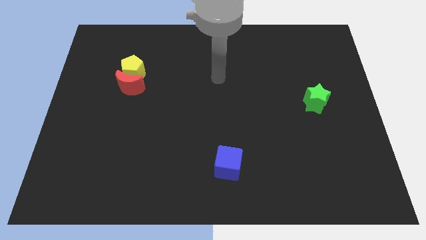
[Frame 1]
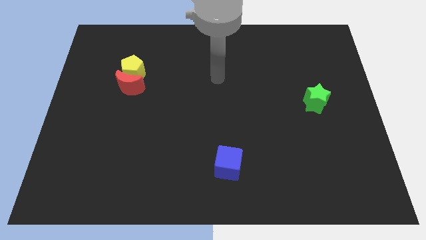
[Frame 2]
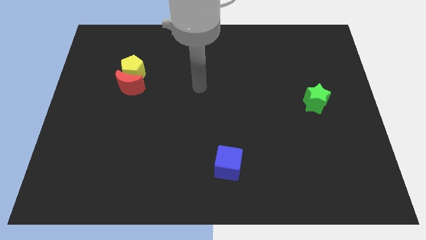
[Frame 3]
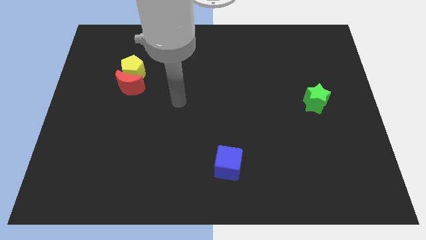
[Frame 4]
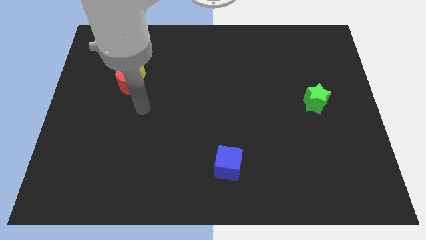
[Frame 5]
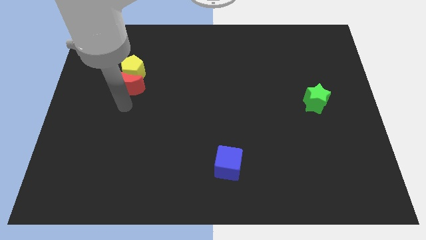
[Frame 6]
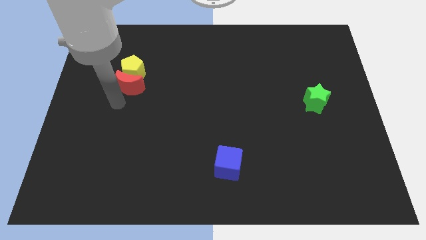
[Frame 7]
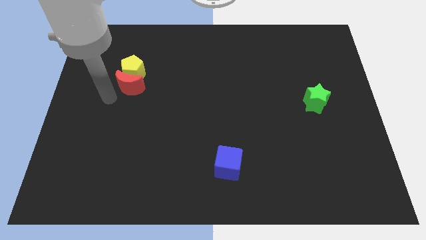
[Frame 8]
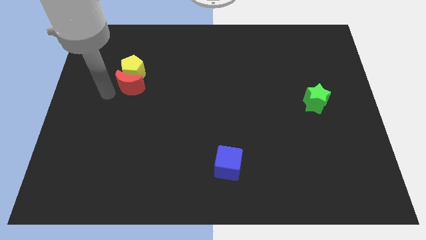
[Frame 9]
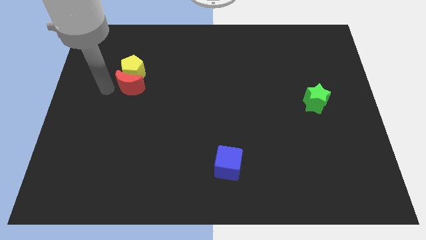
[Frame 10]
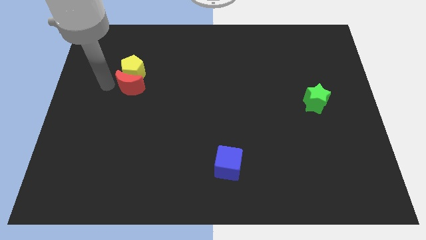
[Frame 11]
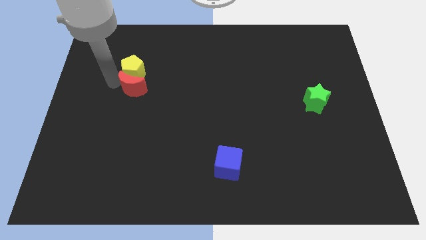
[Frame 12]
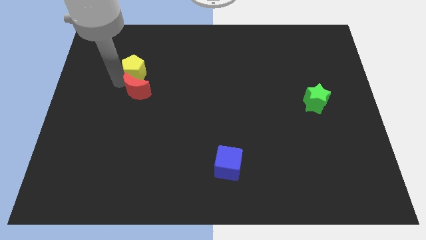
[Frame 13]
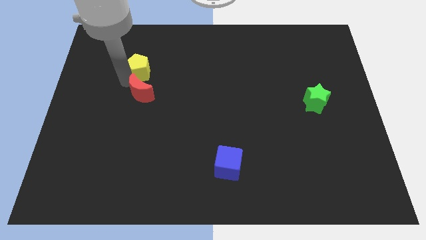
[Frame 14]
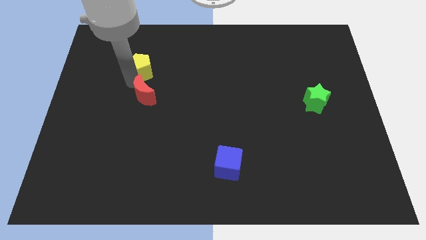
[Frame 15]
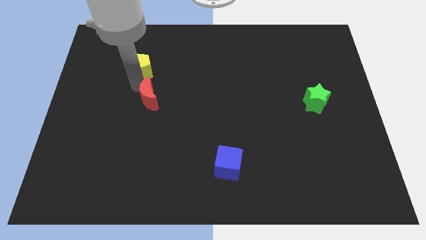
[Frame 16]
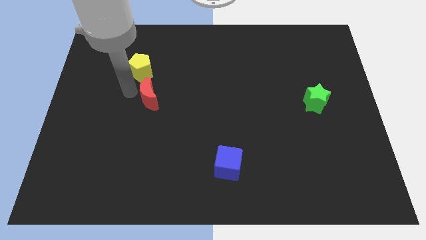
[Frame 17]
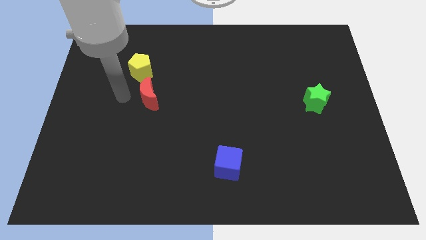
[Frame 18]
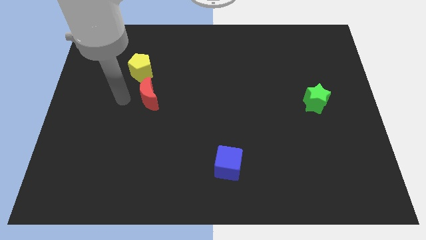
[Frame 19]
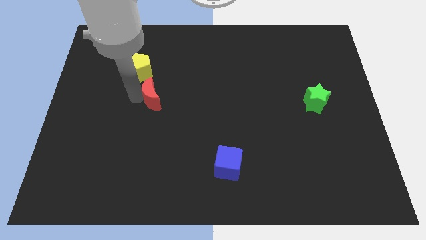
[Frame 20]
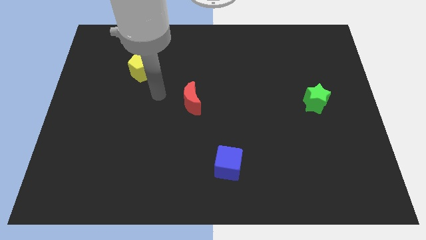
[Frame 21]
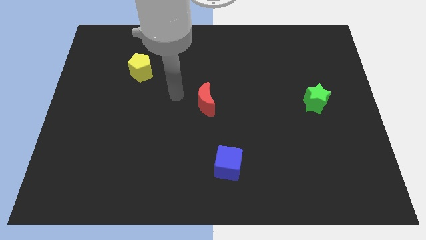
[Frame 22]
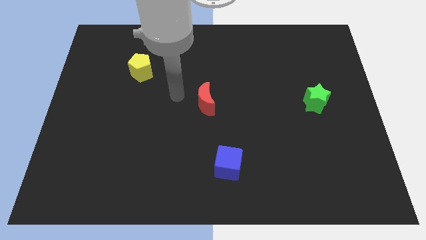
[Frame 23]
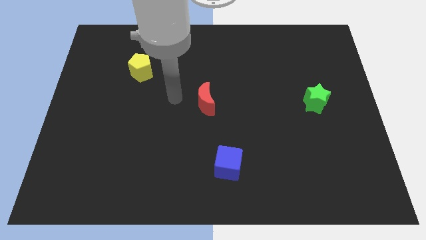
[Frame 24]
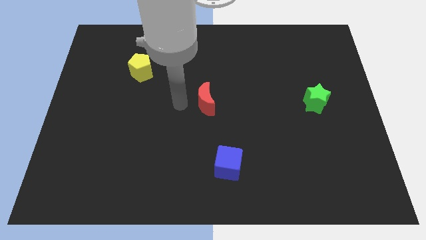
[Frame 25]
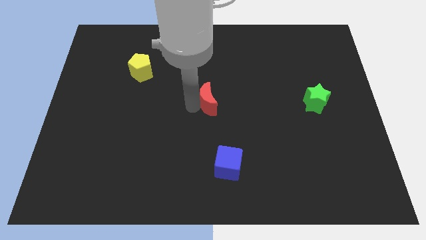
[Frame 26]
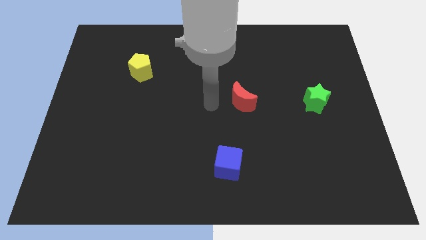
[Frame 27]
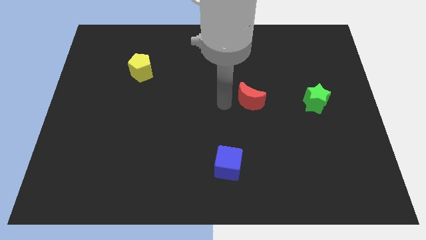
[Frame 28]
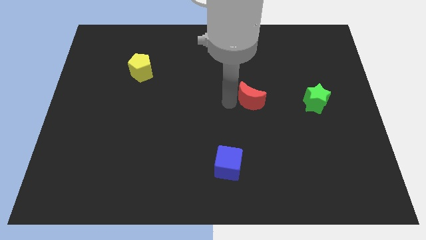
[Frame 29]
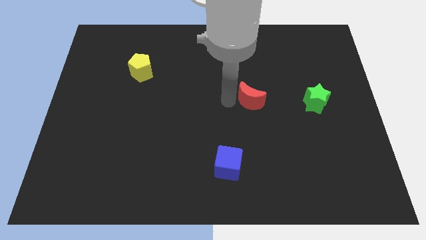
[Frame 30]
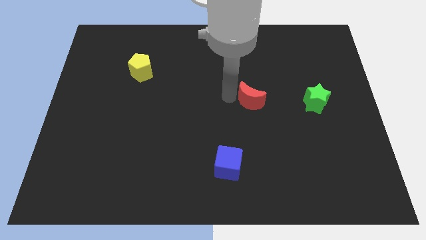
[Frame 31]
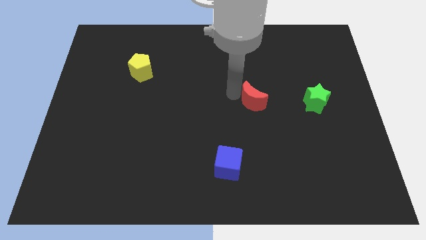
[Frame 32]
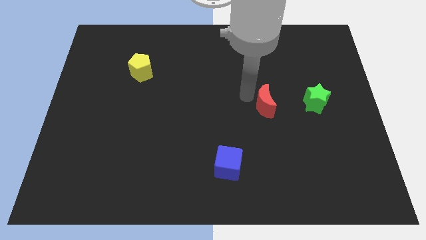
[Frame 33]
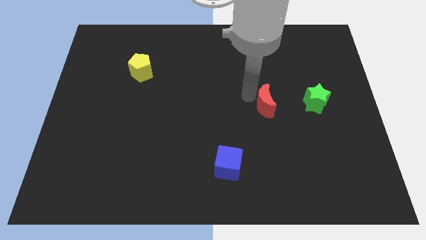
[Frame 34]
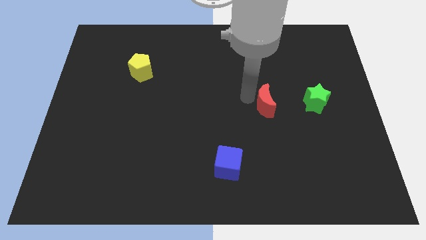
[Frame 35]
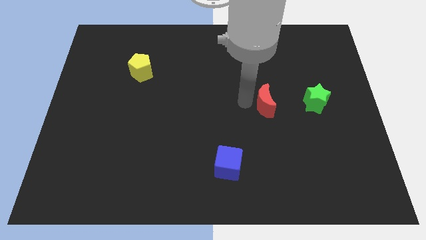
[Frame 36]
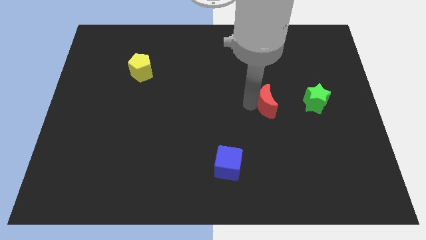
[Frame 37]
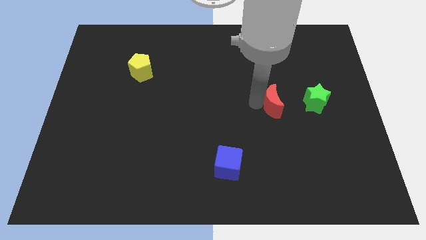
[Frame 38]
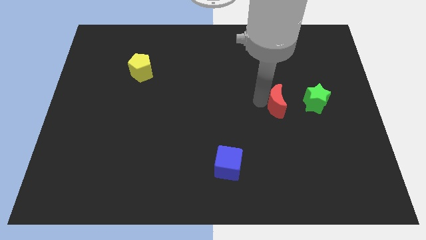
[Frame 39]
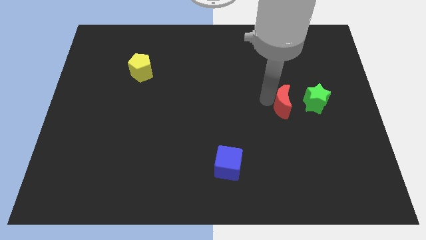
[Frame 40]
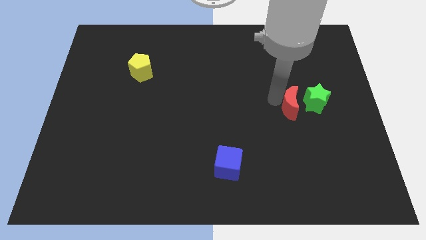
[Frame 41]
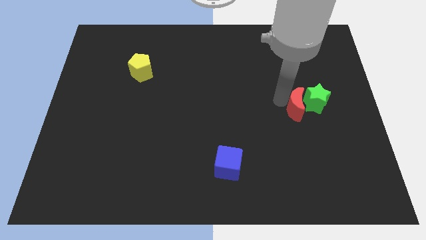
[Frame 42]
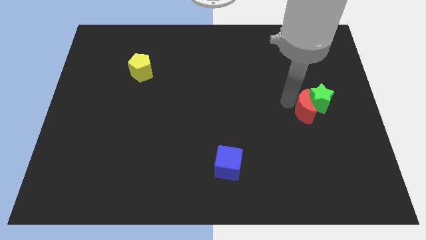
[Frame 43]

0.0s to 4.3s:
put the red moon next to the green block

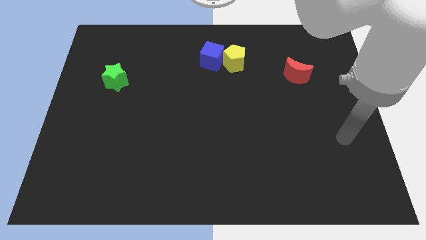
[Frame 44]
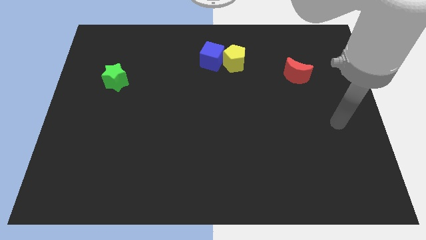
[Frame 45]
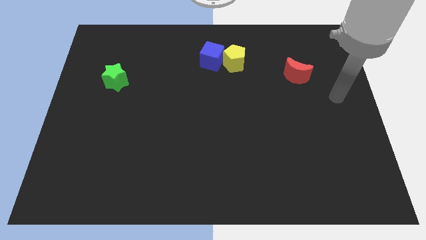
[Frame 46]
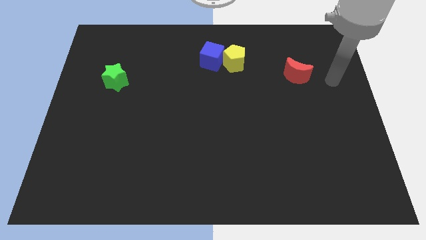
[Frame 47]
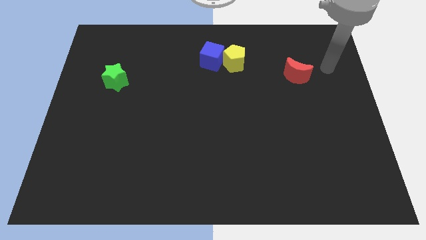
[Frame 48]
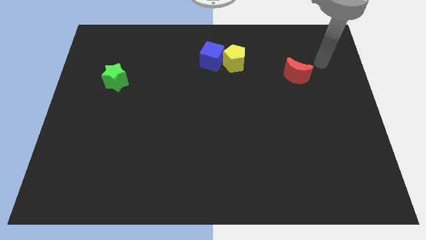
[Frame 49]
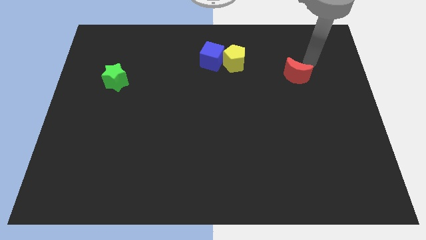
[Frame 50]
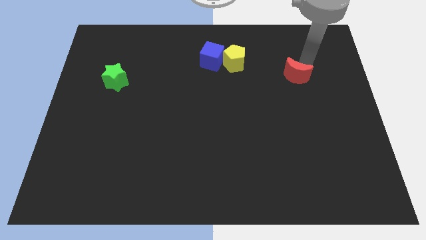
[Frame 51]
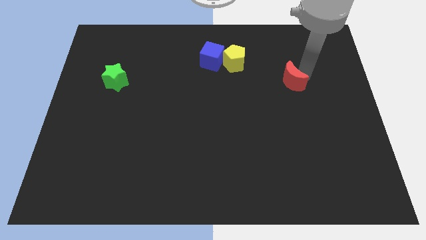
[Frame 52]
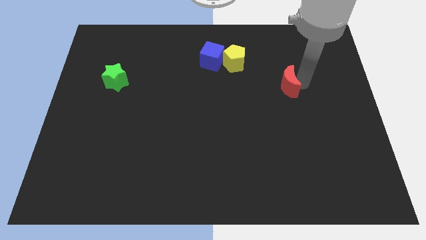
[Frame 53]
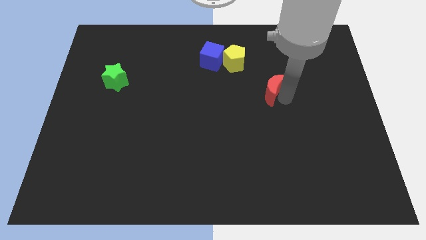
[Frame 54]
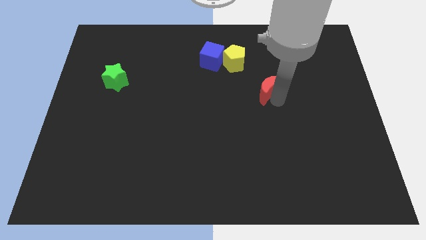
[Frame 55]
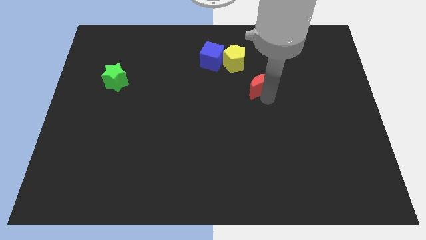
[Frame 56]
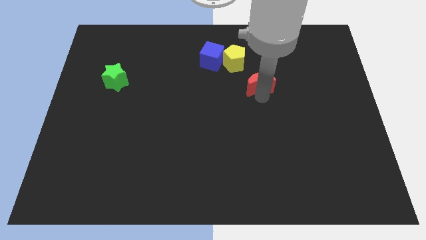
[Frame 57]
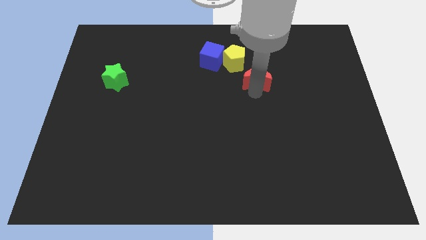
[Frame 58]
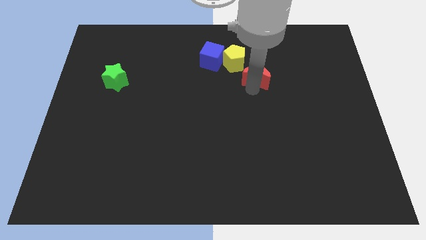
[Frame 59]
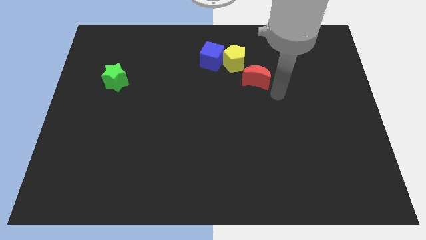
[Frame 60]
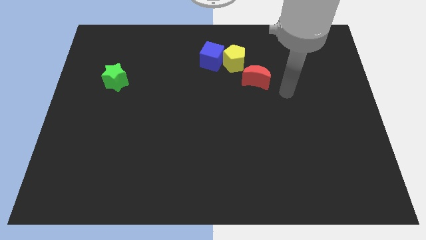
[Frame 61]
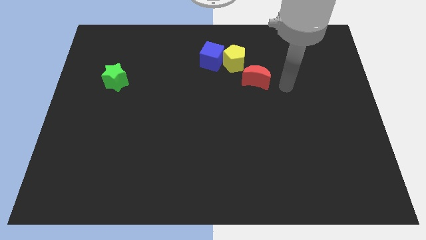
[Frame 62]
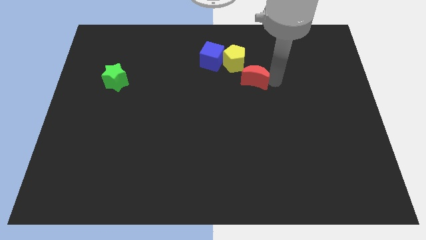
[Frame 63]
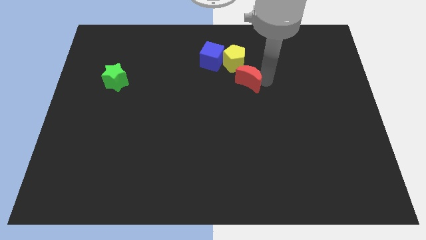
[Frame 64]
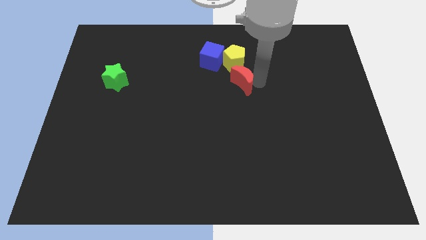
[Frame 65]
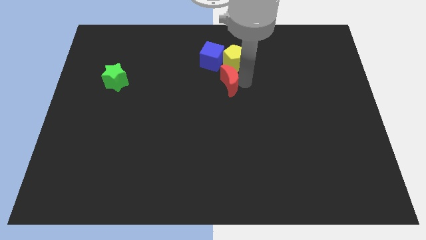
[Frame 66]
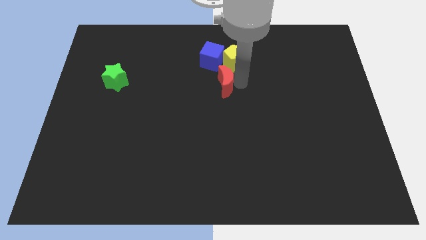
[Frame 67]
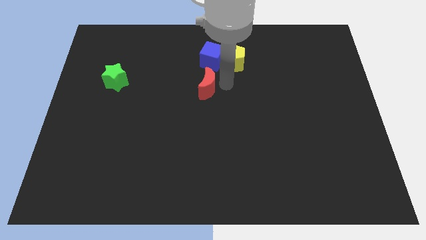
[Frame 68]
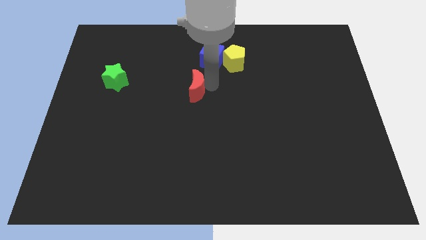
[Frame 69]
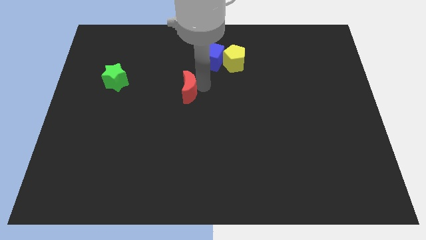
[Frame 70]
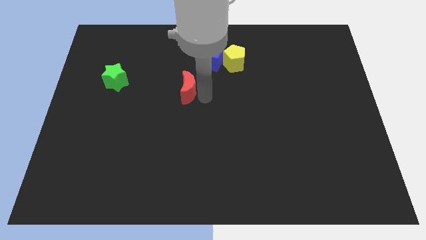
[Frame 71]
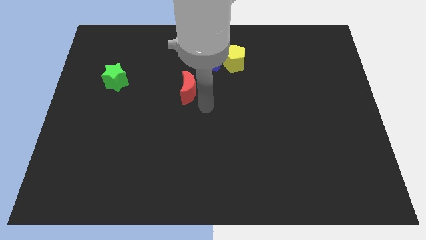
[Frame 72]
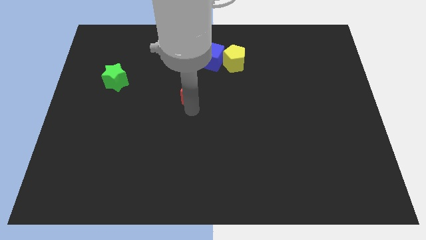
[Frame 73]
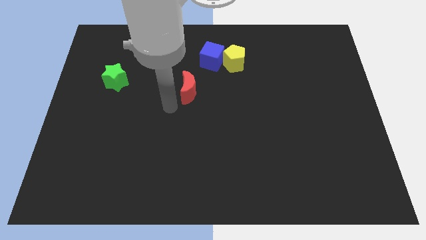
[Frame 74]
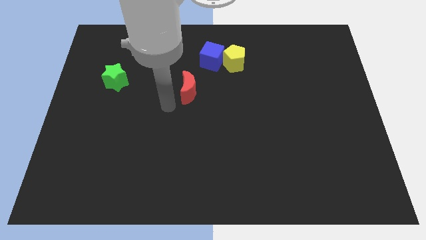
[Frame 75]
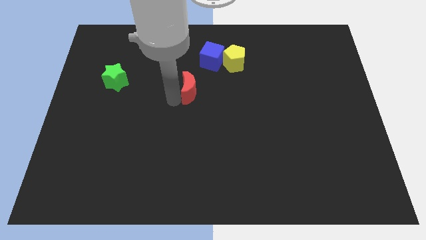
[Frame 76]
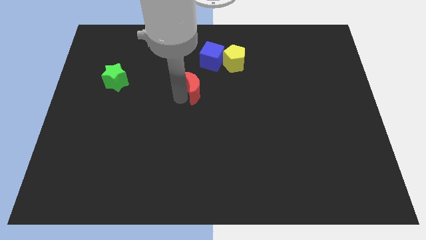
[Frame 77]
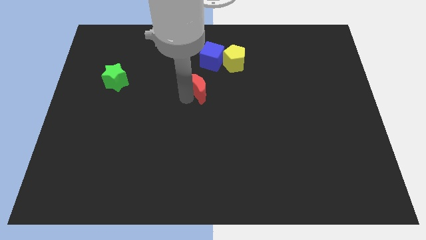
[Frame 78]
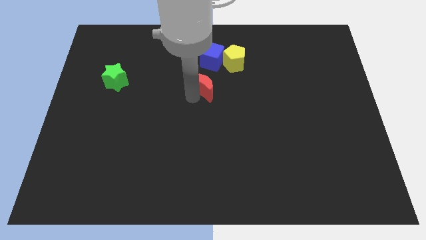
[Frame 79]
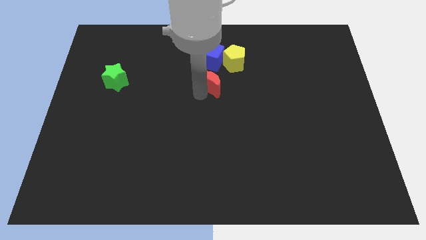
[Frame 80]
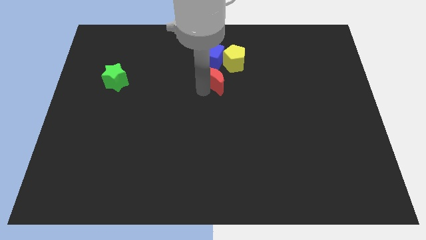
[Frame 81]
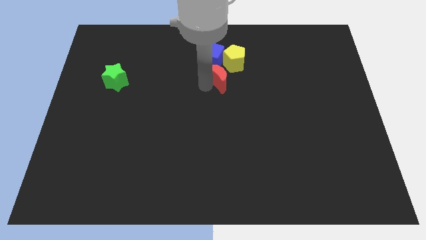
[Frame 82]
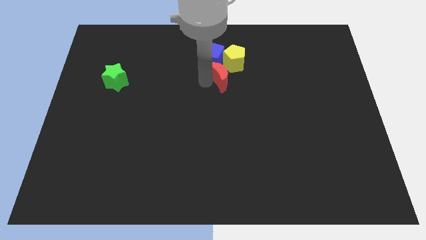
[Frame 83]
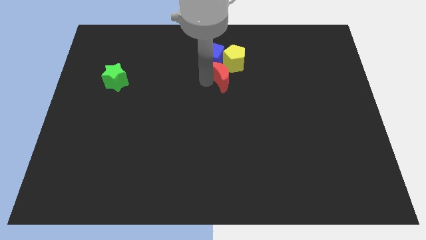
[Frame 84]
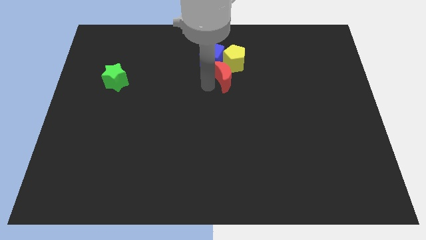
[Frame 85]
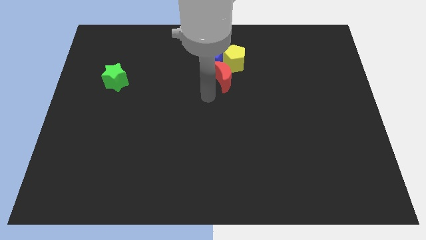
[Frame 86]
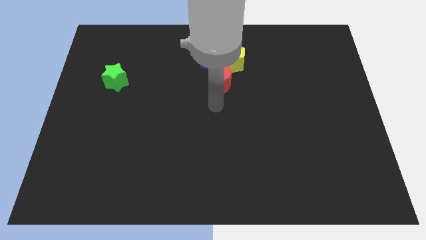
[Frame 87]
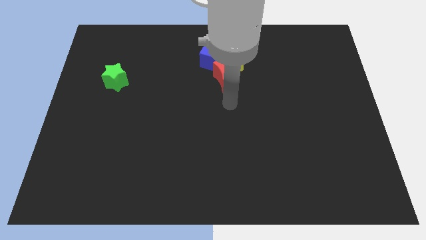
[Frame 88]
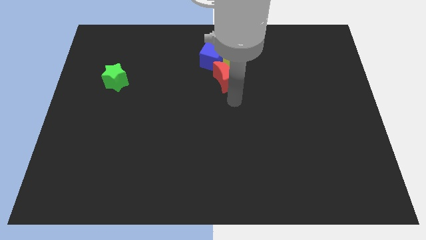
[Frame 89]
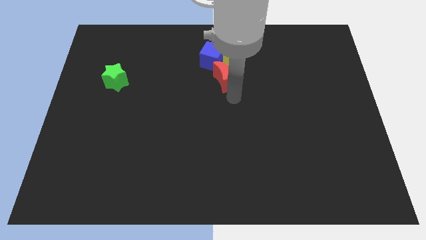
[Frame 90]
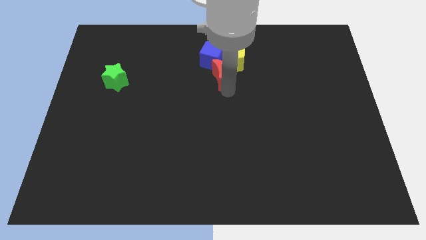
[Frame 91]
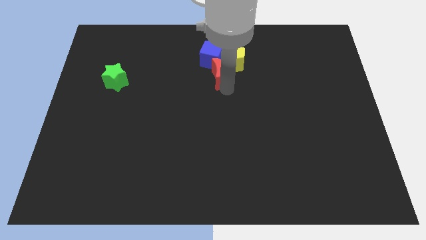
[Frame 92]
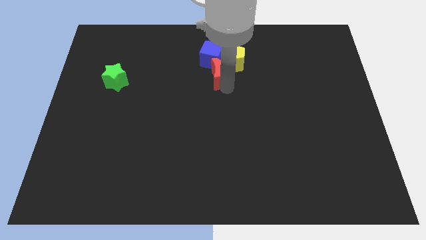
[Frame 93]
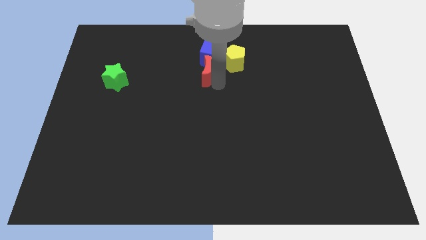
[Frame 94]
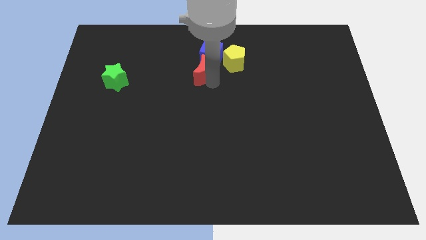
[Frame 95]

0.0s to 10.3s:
move the moon close to the cube
